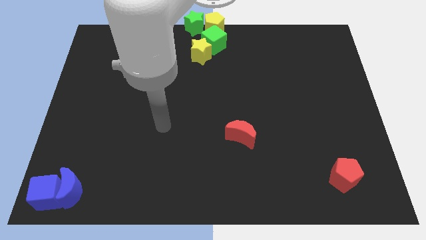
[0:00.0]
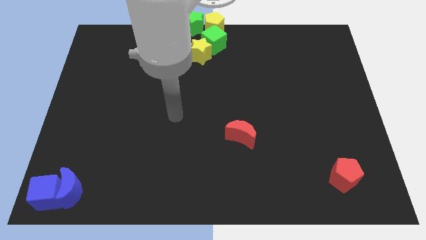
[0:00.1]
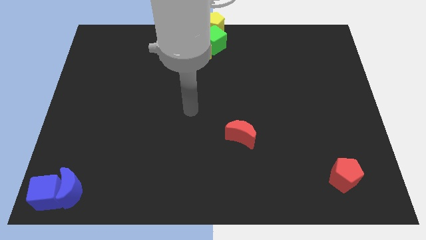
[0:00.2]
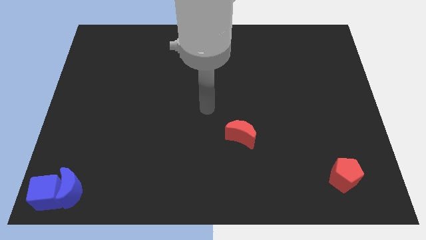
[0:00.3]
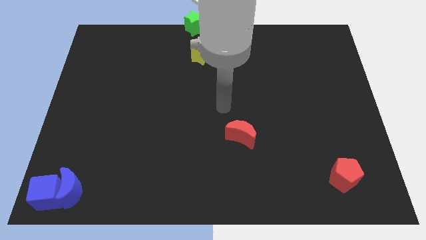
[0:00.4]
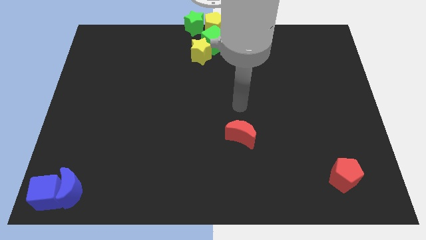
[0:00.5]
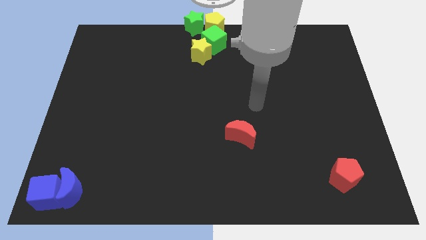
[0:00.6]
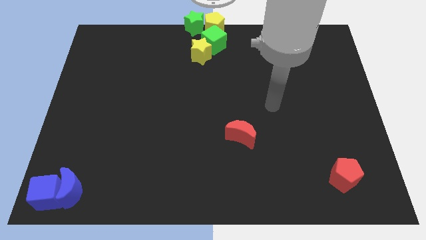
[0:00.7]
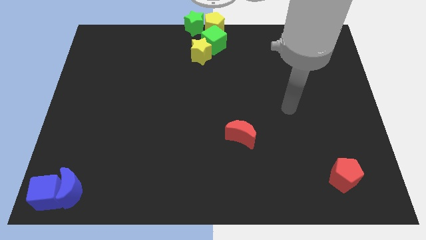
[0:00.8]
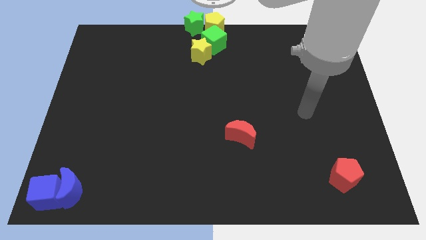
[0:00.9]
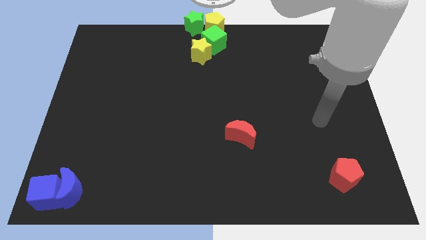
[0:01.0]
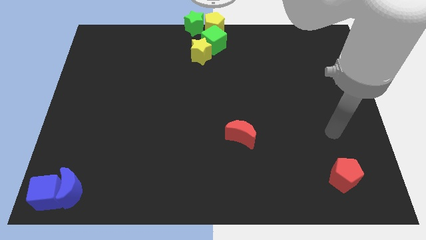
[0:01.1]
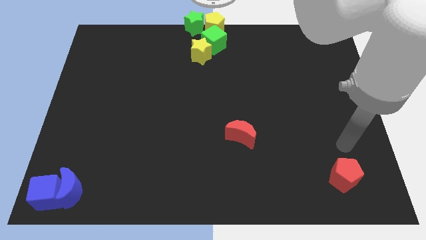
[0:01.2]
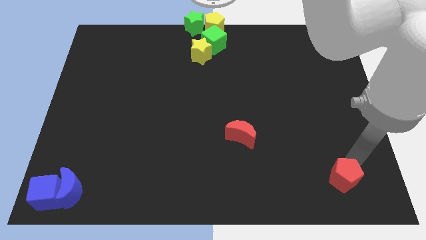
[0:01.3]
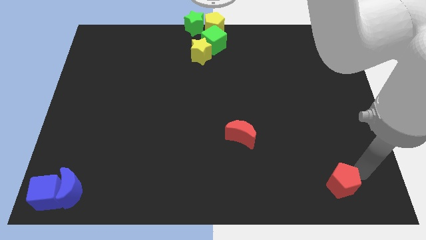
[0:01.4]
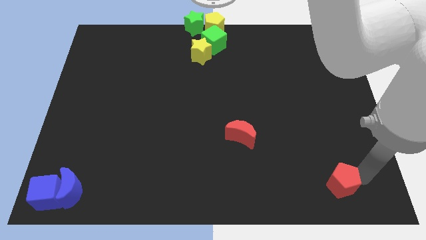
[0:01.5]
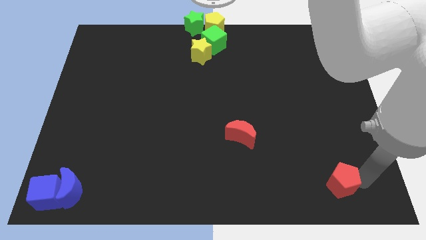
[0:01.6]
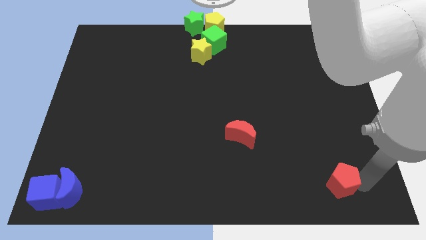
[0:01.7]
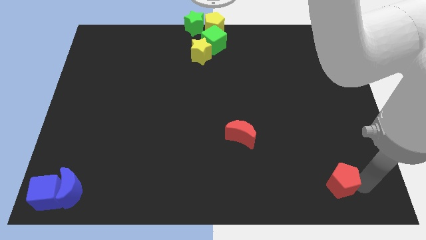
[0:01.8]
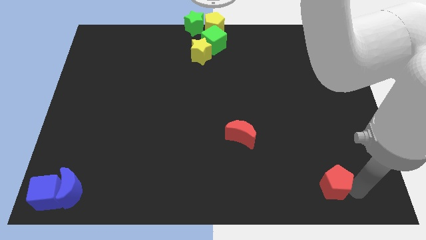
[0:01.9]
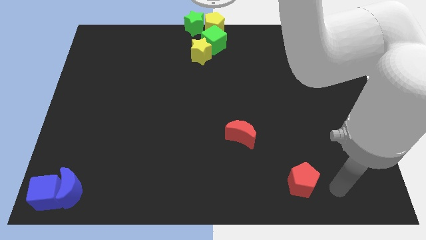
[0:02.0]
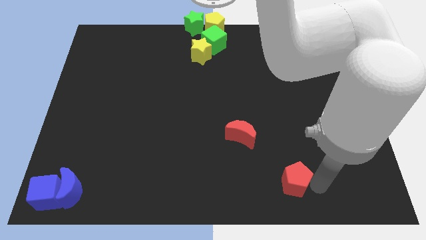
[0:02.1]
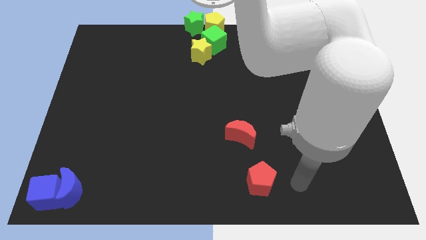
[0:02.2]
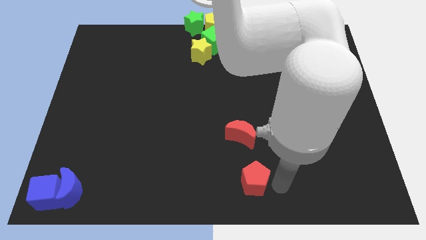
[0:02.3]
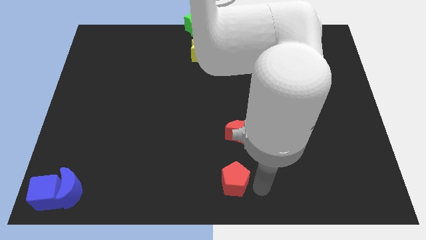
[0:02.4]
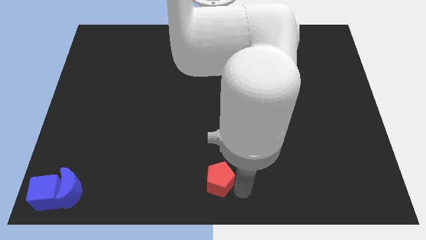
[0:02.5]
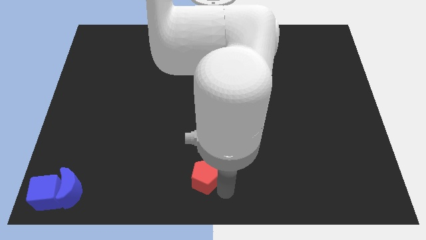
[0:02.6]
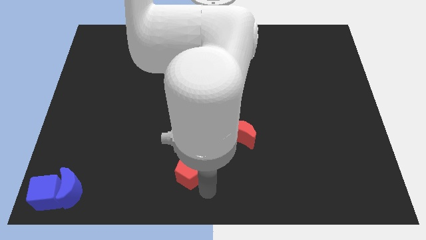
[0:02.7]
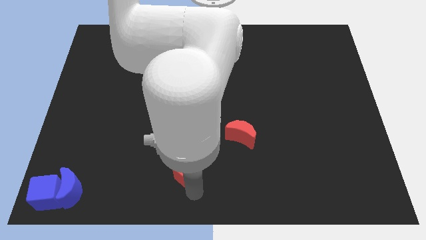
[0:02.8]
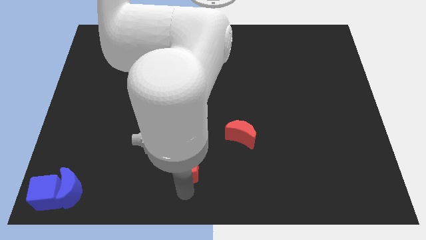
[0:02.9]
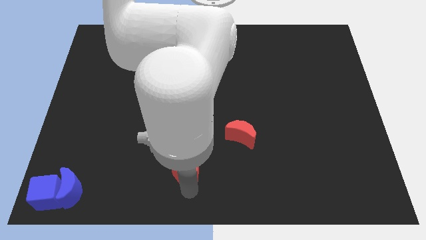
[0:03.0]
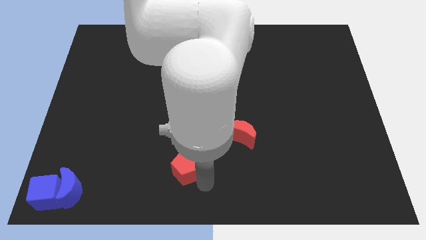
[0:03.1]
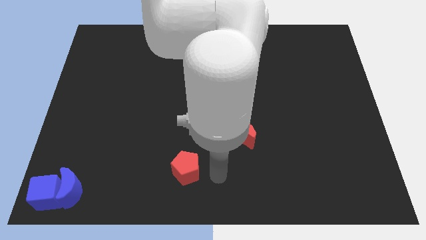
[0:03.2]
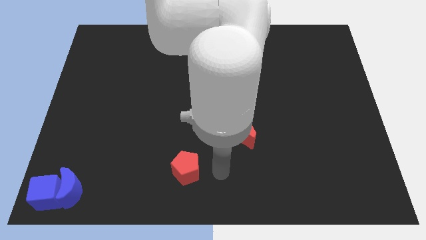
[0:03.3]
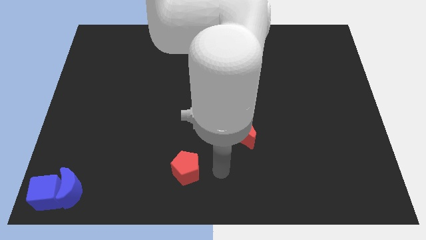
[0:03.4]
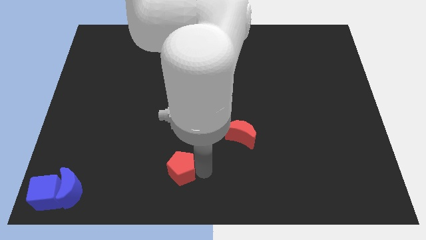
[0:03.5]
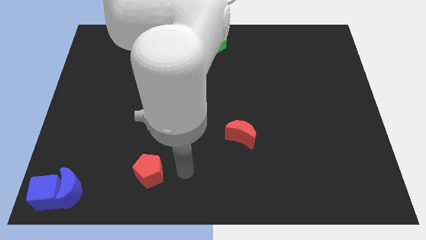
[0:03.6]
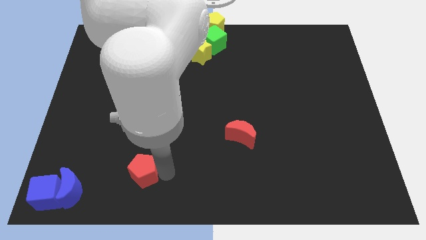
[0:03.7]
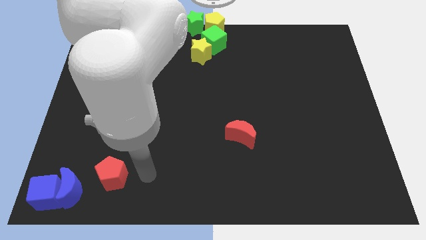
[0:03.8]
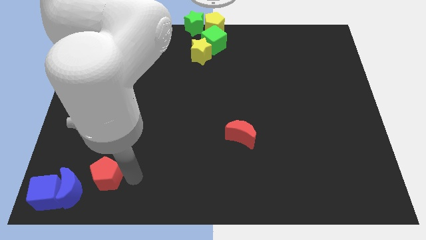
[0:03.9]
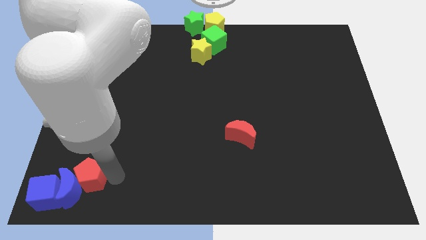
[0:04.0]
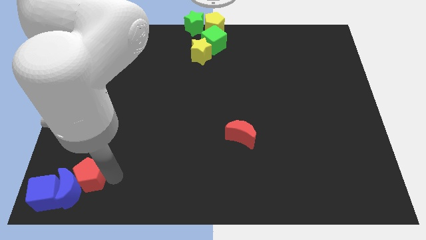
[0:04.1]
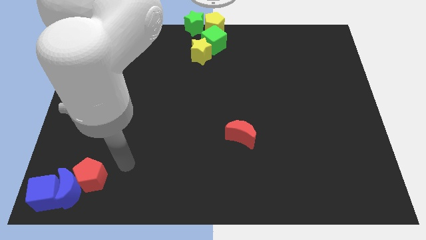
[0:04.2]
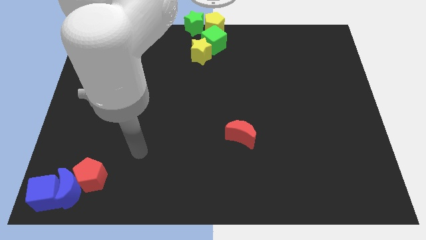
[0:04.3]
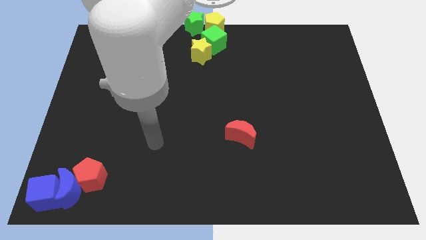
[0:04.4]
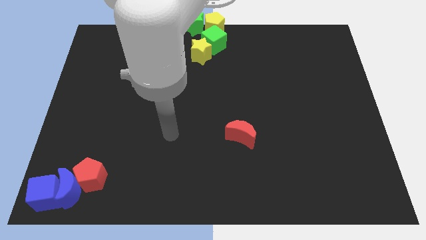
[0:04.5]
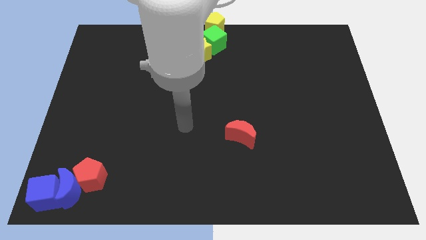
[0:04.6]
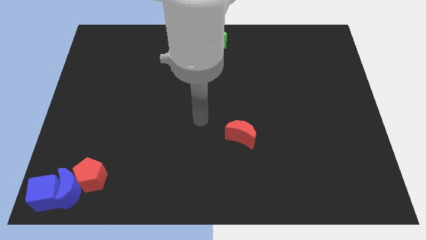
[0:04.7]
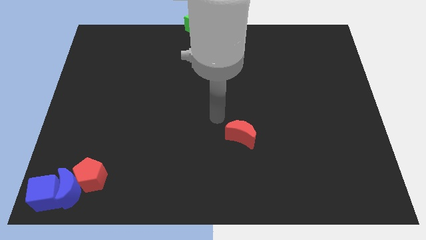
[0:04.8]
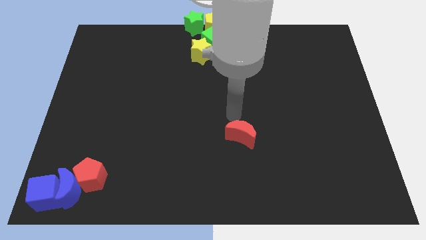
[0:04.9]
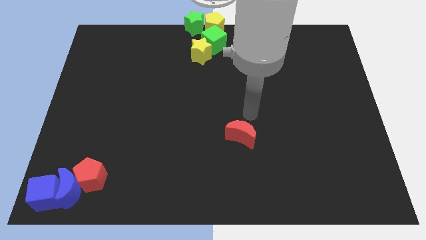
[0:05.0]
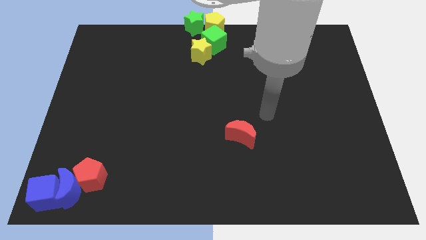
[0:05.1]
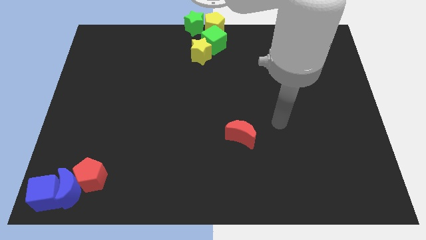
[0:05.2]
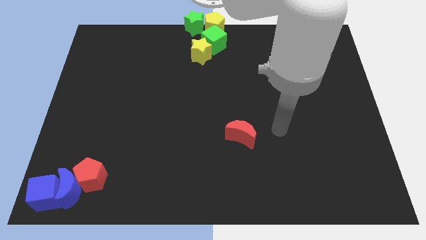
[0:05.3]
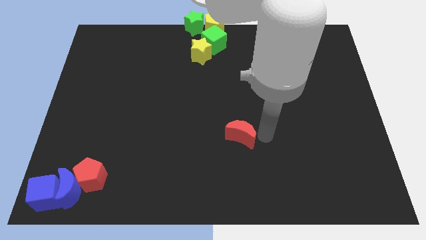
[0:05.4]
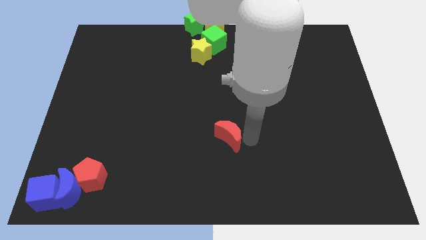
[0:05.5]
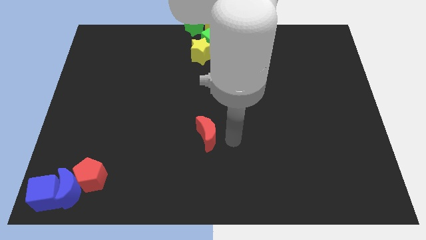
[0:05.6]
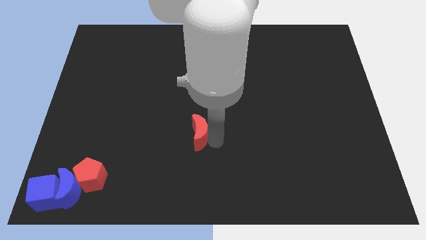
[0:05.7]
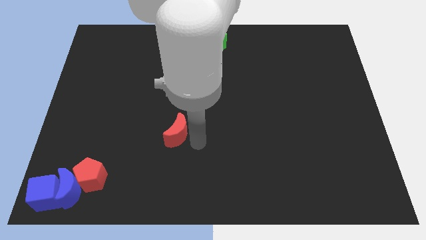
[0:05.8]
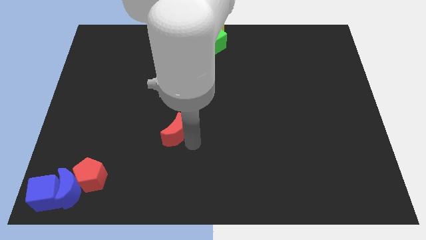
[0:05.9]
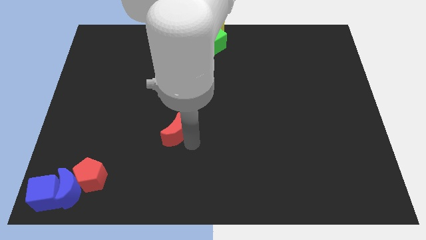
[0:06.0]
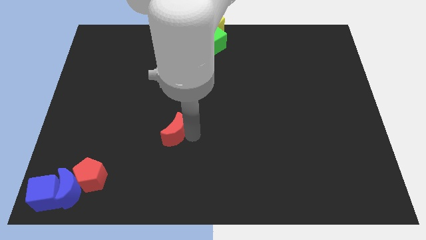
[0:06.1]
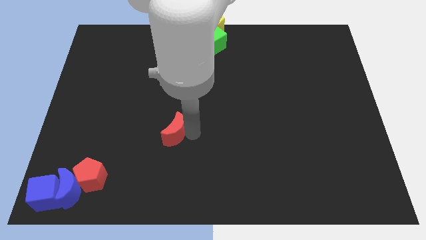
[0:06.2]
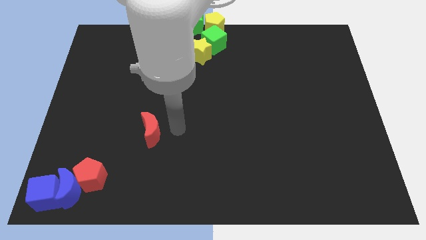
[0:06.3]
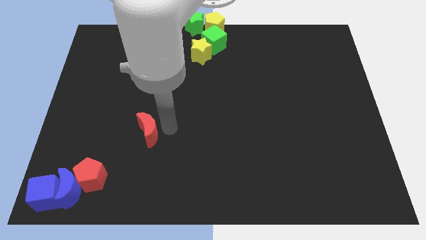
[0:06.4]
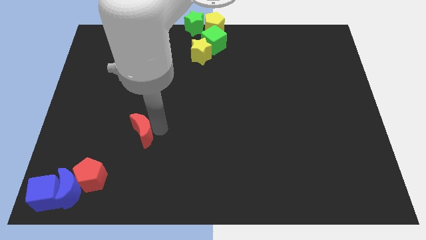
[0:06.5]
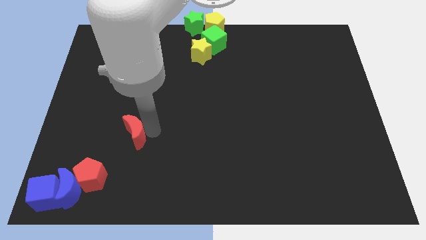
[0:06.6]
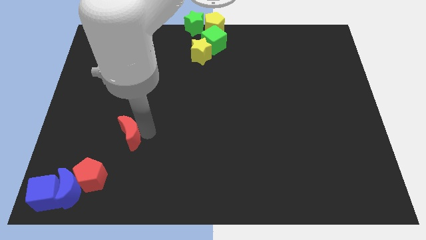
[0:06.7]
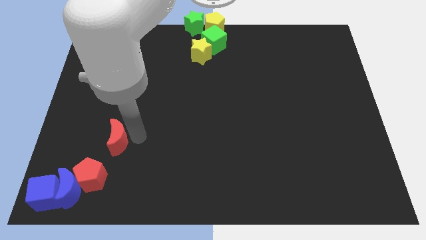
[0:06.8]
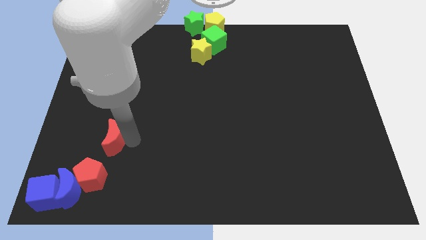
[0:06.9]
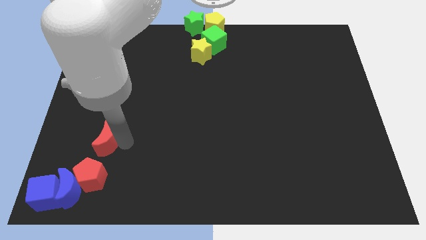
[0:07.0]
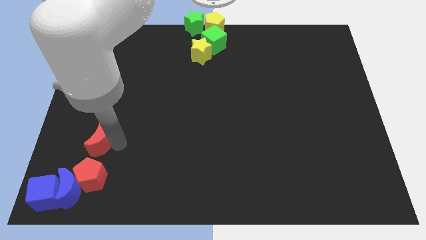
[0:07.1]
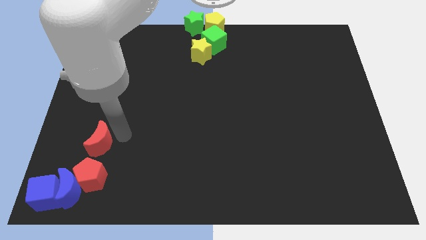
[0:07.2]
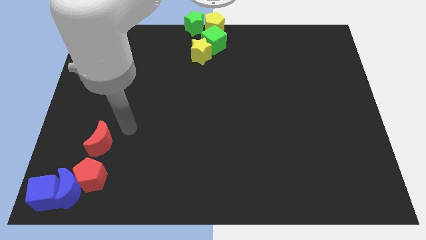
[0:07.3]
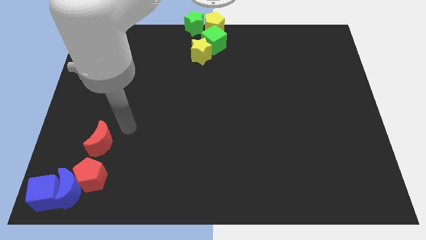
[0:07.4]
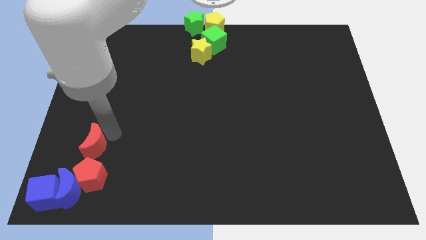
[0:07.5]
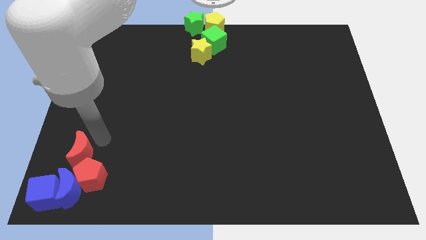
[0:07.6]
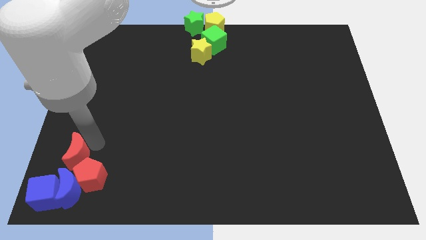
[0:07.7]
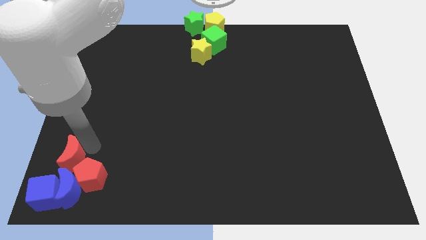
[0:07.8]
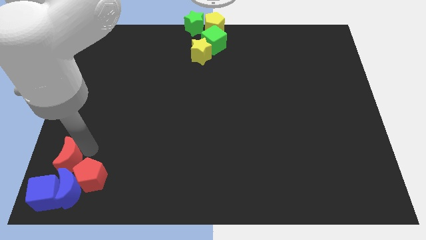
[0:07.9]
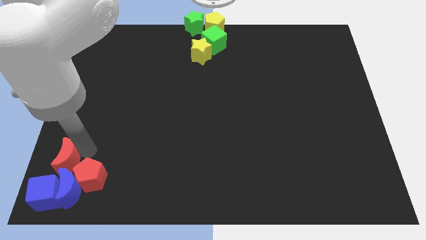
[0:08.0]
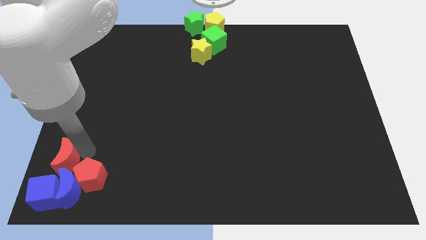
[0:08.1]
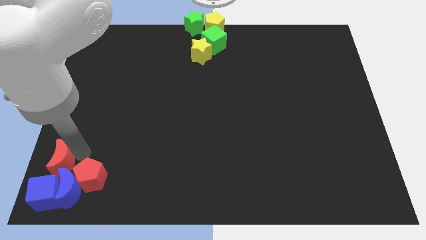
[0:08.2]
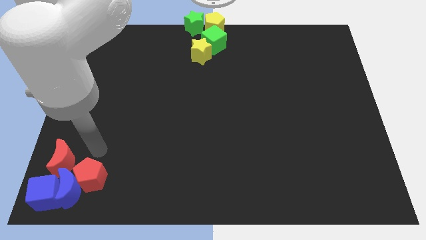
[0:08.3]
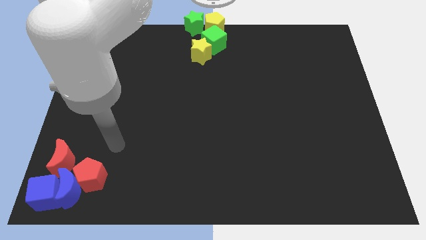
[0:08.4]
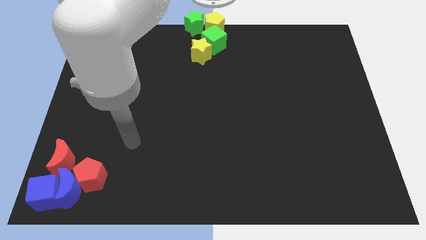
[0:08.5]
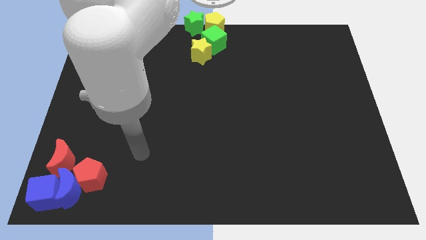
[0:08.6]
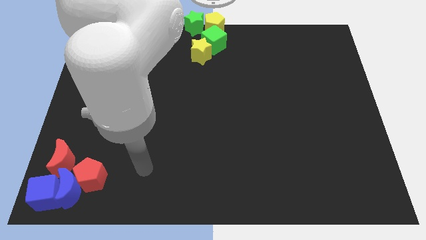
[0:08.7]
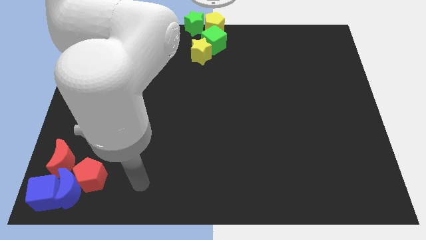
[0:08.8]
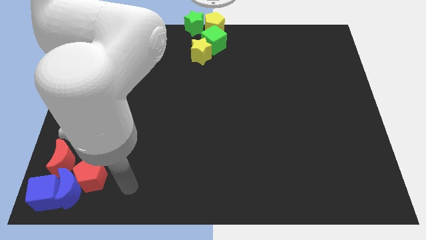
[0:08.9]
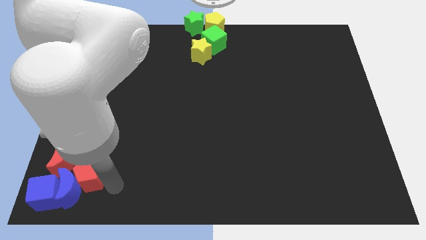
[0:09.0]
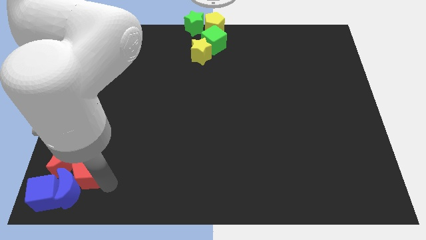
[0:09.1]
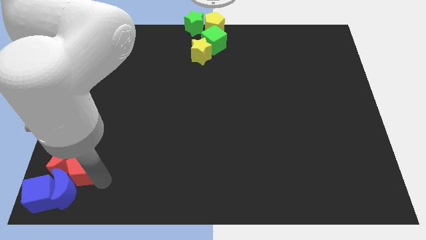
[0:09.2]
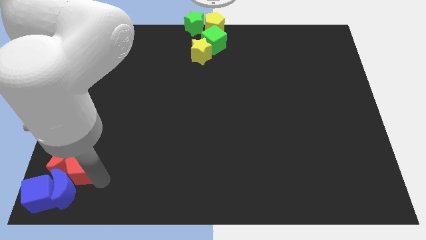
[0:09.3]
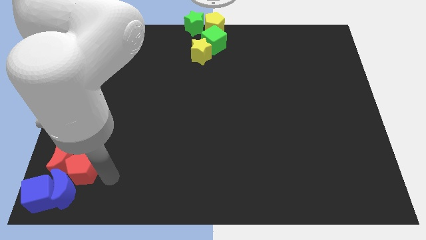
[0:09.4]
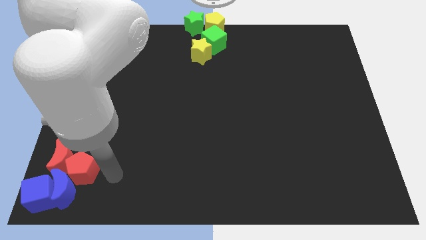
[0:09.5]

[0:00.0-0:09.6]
place the red pentagon along with the red crescent above the blue crescent
